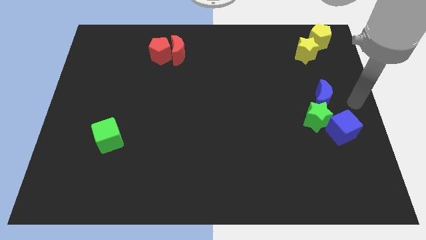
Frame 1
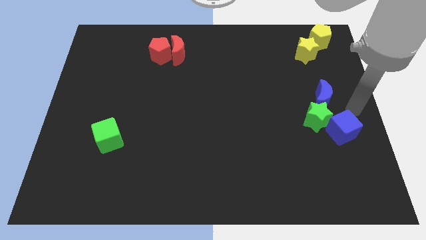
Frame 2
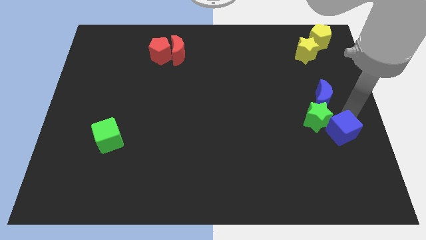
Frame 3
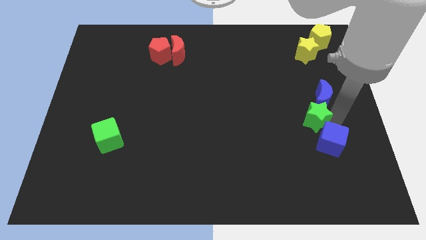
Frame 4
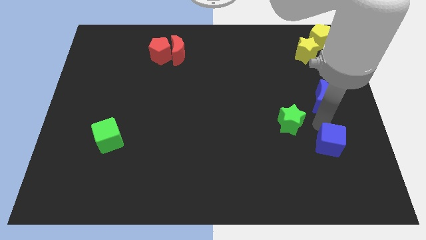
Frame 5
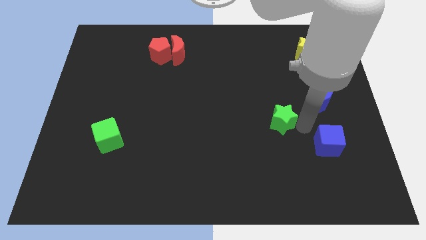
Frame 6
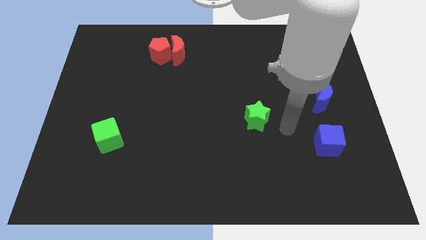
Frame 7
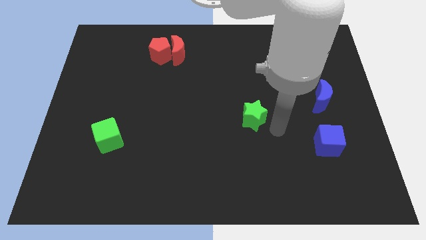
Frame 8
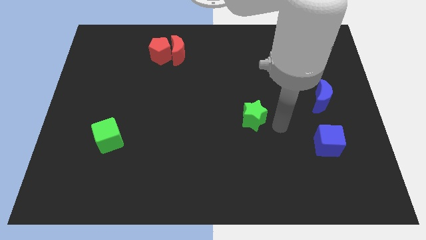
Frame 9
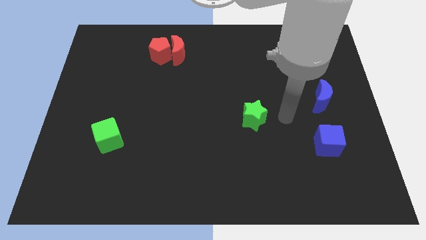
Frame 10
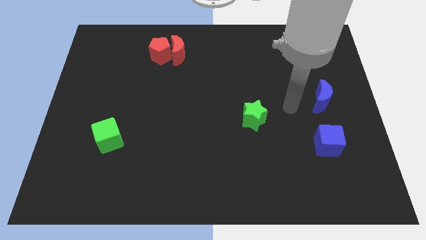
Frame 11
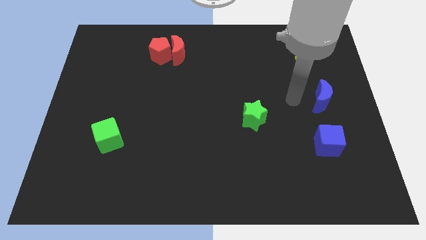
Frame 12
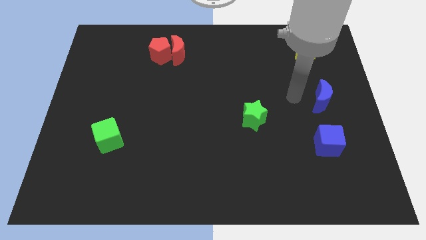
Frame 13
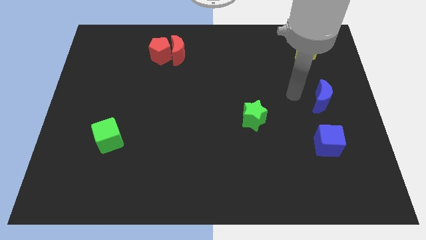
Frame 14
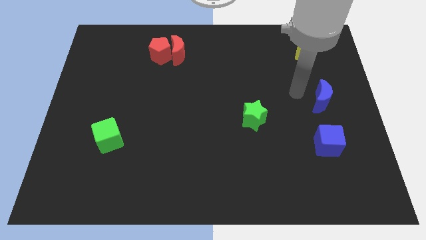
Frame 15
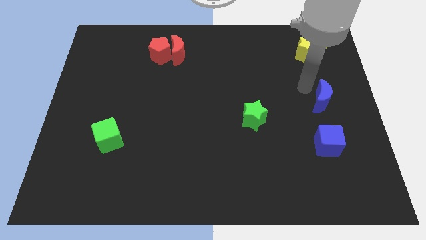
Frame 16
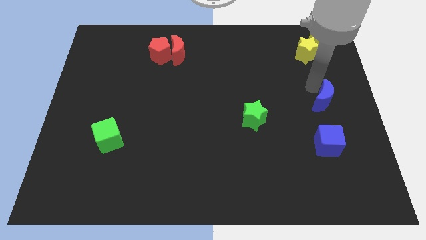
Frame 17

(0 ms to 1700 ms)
separate the green star from the blue cube

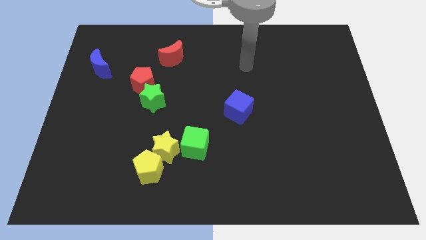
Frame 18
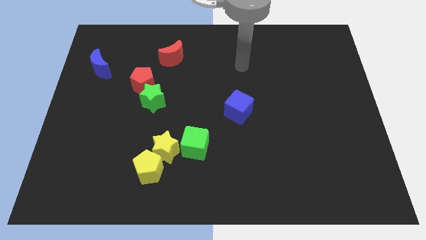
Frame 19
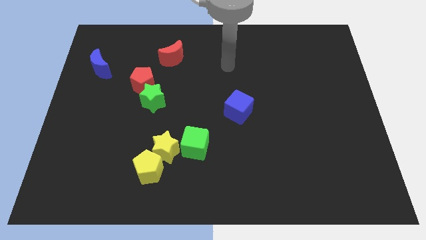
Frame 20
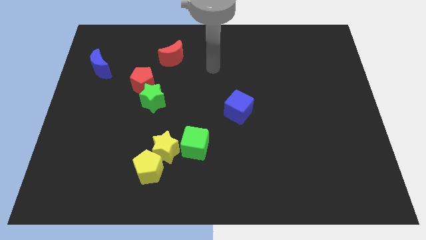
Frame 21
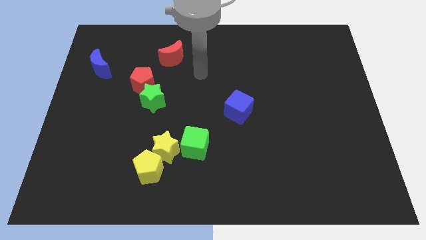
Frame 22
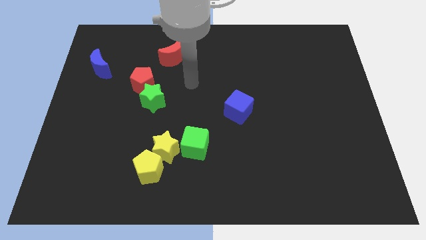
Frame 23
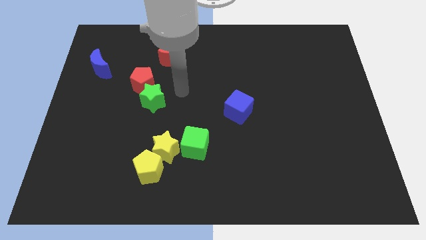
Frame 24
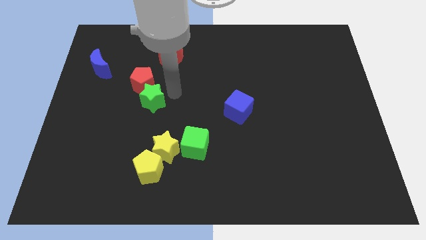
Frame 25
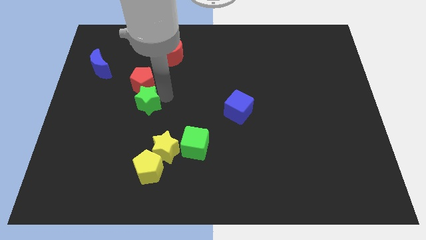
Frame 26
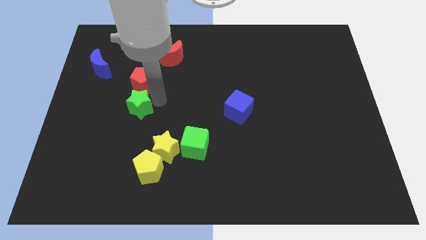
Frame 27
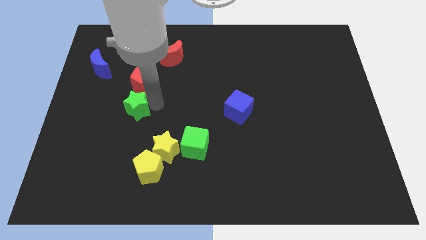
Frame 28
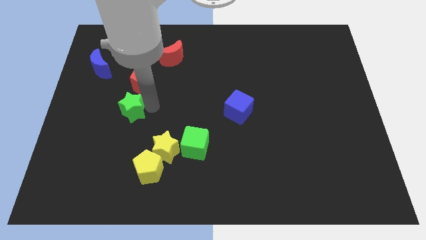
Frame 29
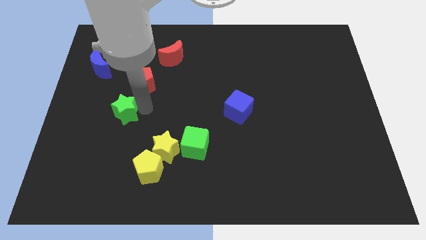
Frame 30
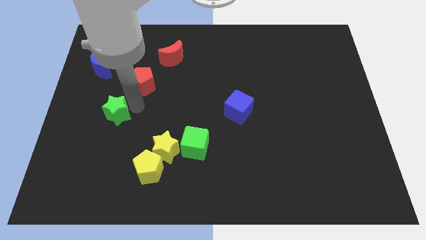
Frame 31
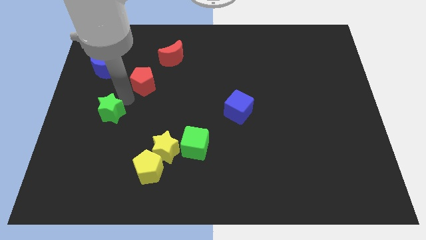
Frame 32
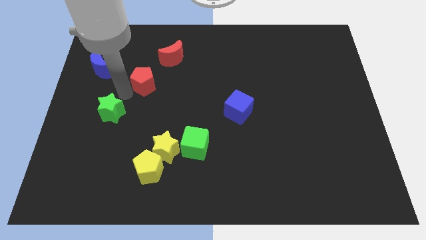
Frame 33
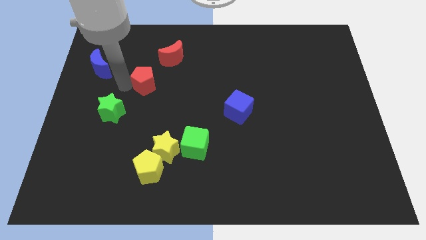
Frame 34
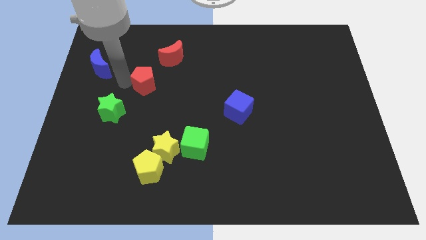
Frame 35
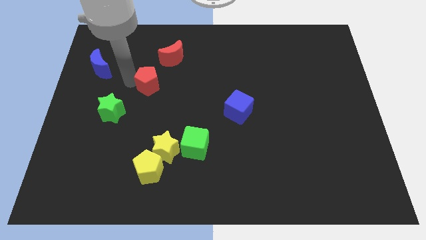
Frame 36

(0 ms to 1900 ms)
separate the green star red pentagon

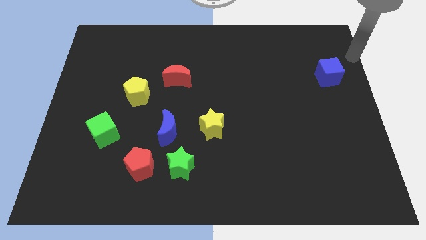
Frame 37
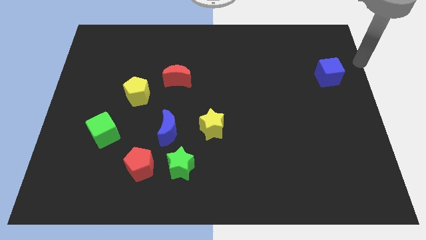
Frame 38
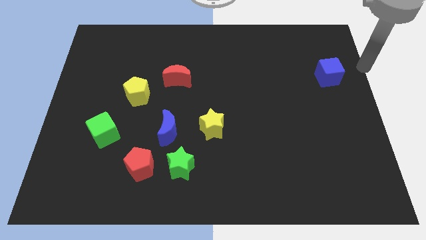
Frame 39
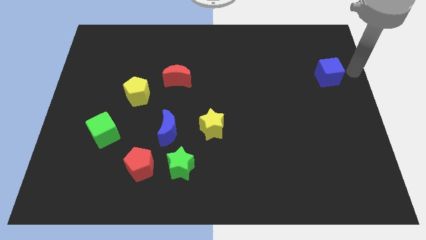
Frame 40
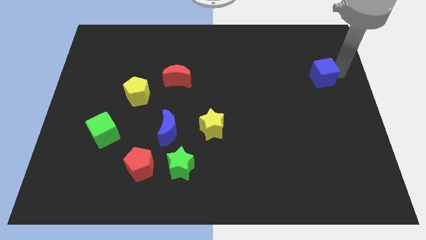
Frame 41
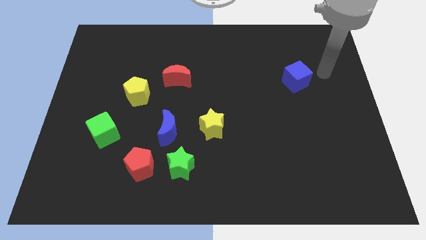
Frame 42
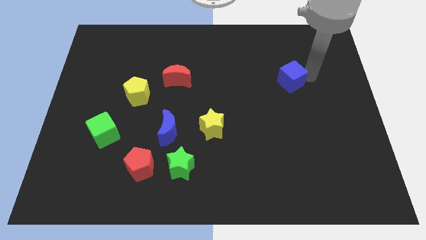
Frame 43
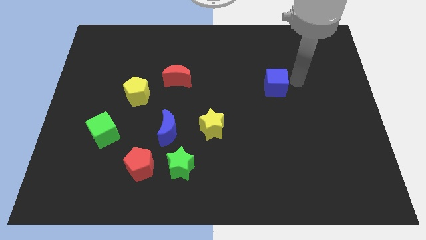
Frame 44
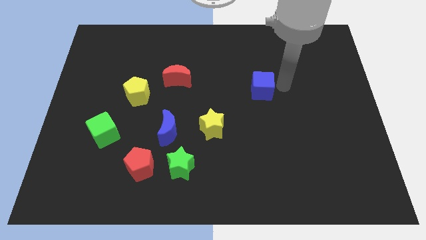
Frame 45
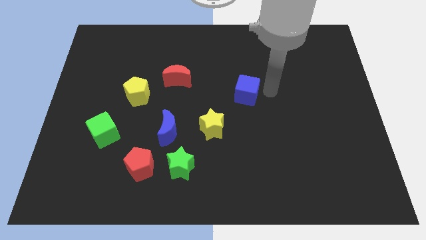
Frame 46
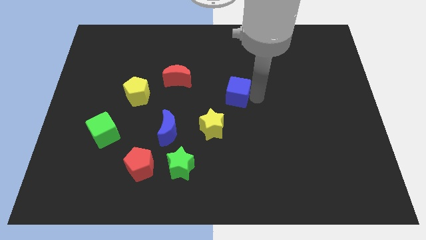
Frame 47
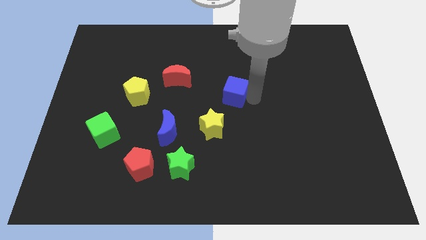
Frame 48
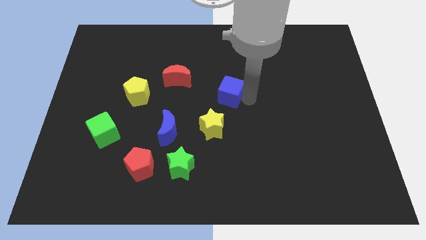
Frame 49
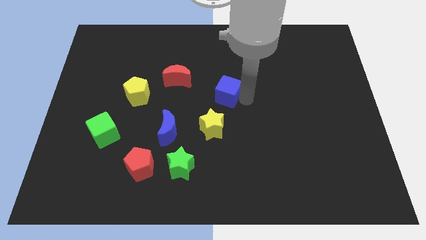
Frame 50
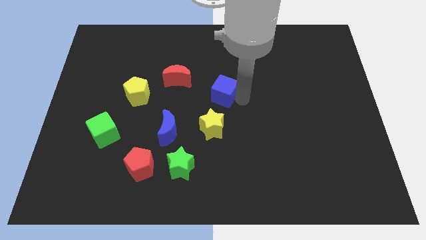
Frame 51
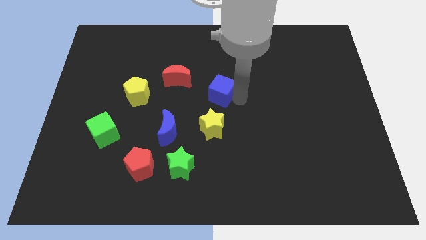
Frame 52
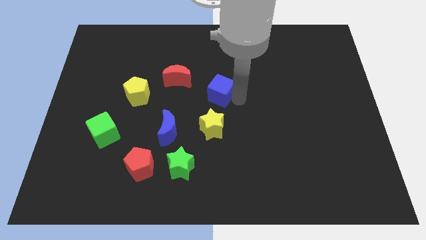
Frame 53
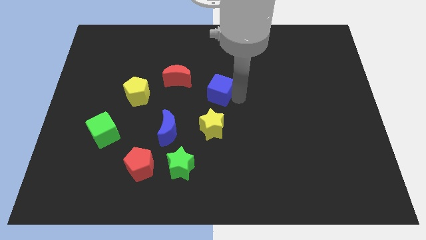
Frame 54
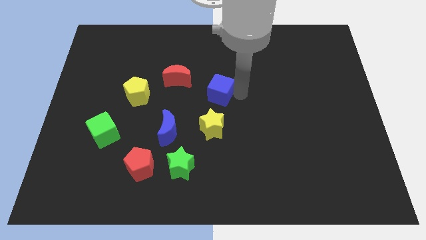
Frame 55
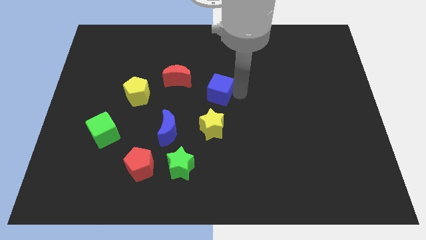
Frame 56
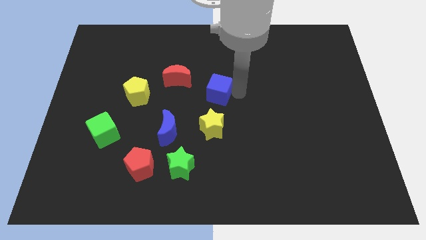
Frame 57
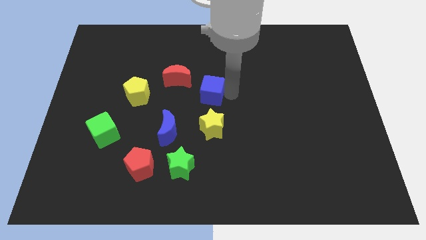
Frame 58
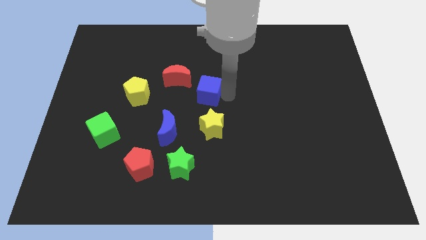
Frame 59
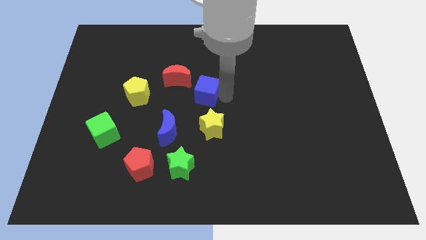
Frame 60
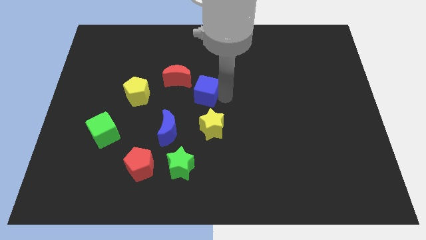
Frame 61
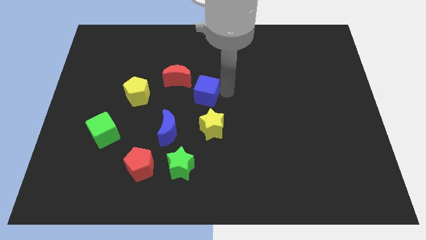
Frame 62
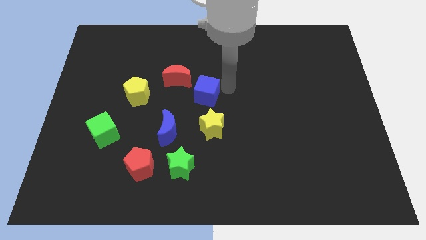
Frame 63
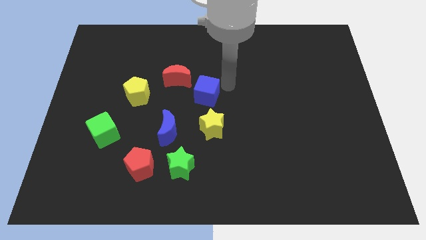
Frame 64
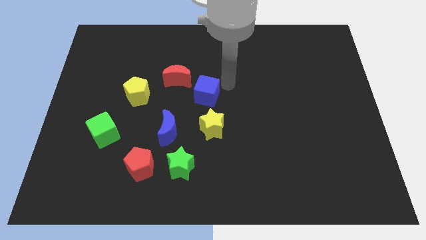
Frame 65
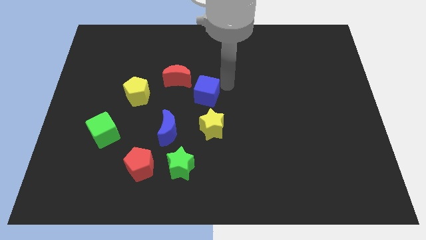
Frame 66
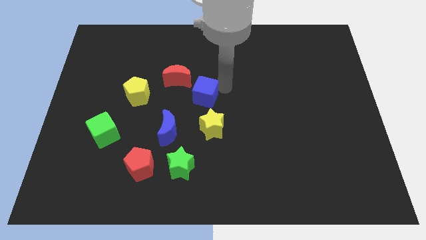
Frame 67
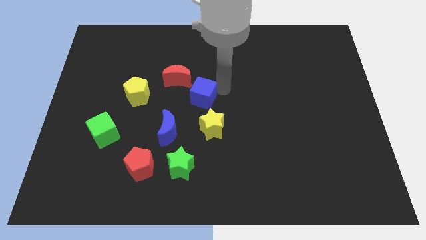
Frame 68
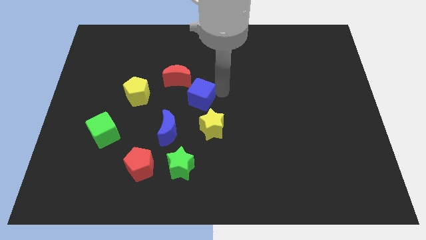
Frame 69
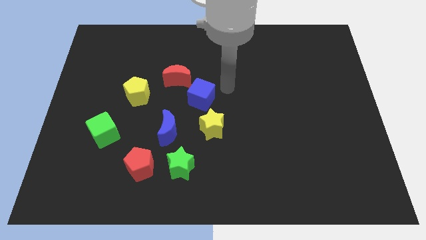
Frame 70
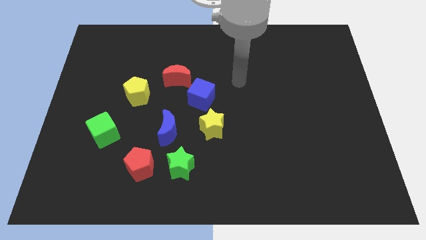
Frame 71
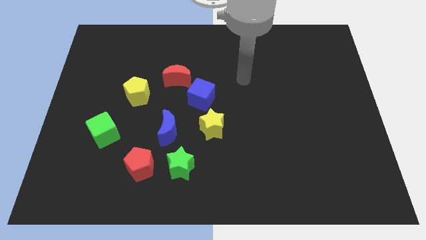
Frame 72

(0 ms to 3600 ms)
place the blue cube to the top of the yellow star

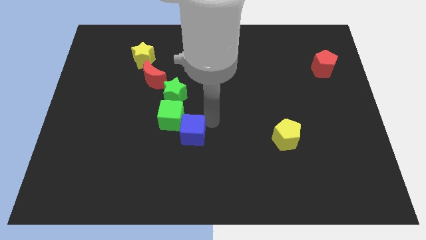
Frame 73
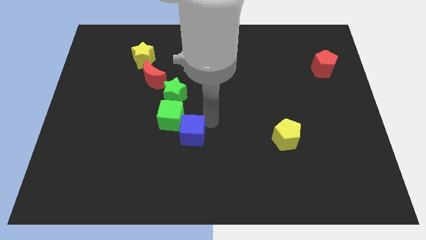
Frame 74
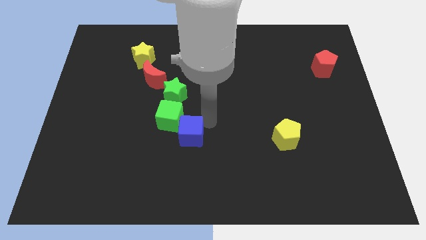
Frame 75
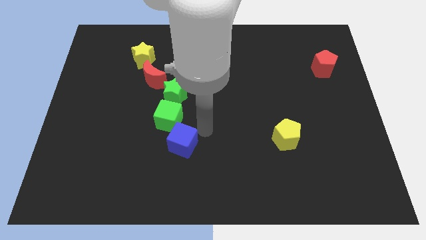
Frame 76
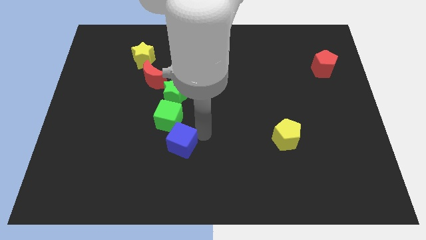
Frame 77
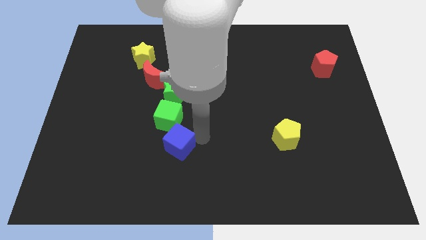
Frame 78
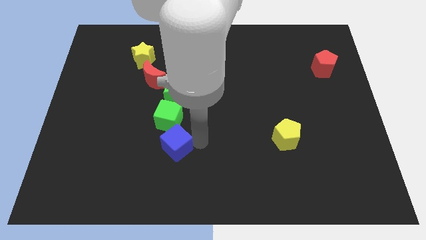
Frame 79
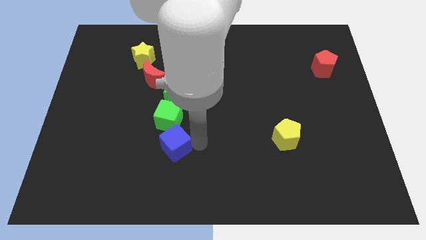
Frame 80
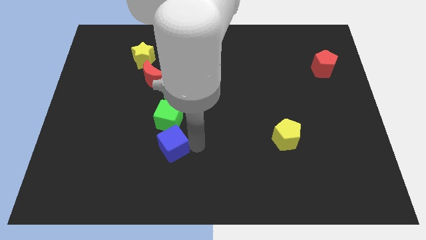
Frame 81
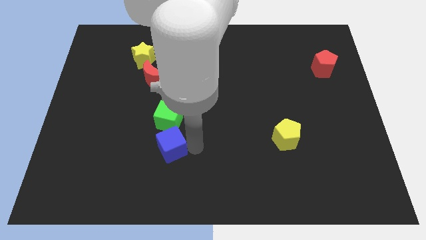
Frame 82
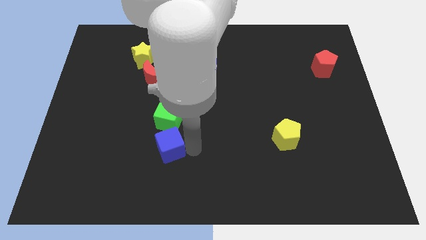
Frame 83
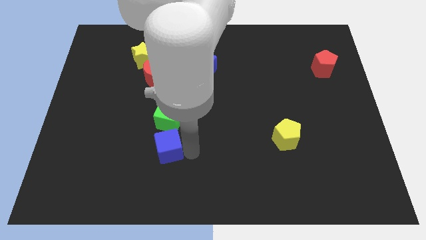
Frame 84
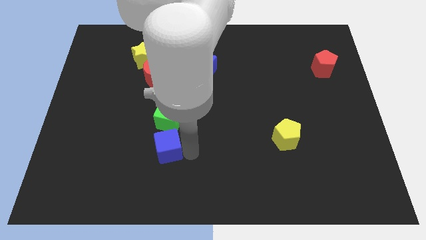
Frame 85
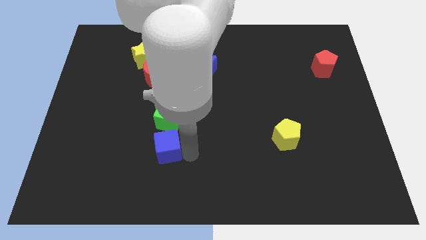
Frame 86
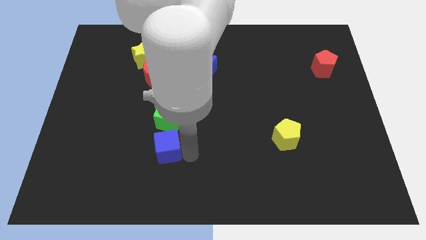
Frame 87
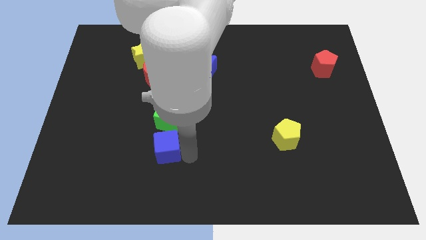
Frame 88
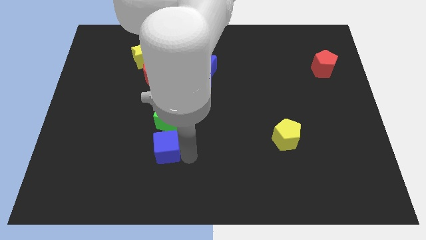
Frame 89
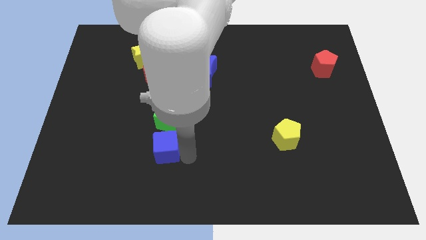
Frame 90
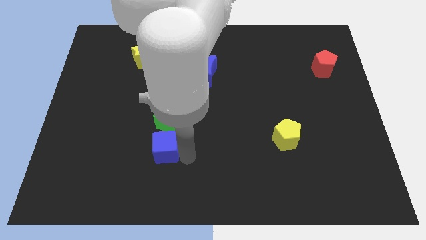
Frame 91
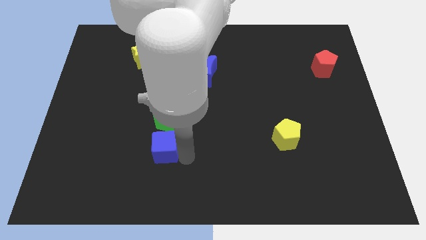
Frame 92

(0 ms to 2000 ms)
place the blue cube at the bottom side of the green cube
